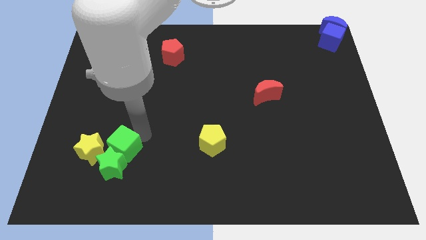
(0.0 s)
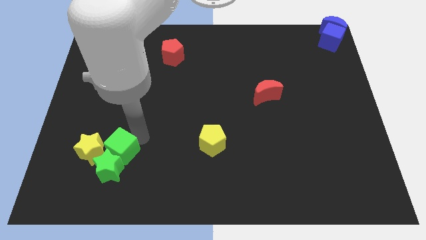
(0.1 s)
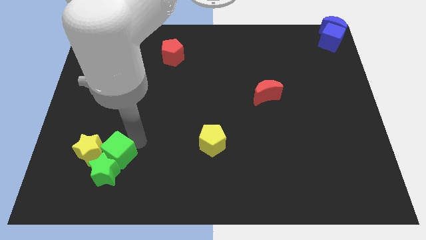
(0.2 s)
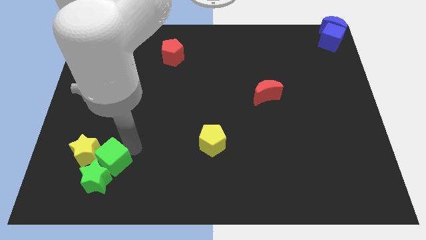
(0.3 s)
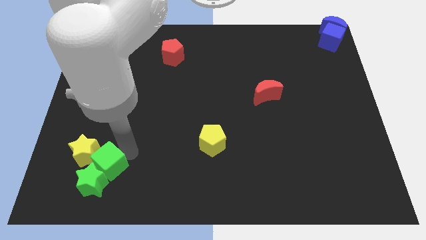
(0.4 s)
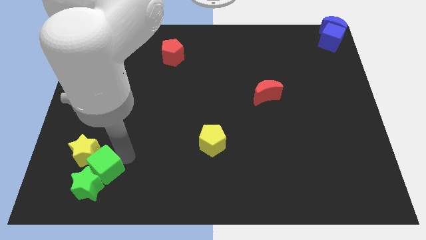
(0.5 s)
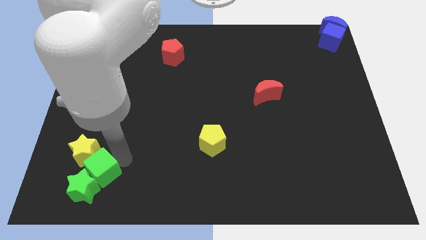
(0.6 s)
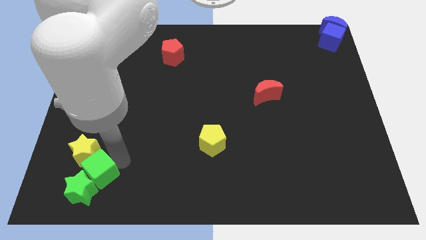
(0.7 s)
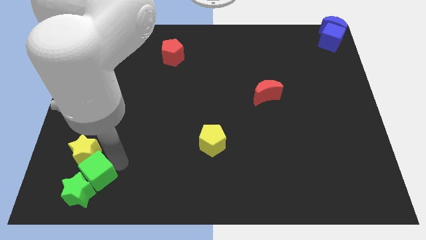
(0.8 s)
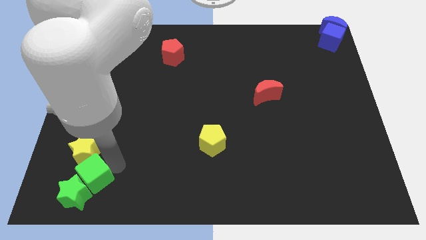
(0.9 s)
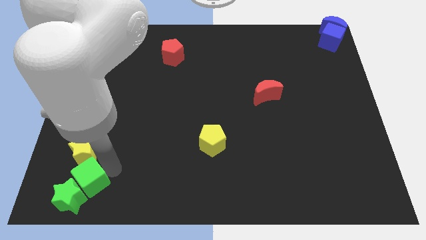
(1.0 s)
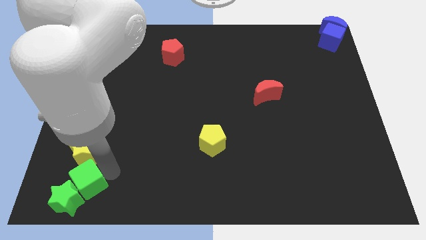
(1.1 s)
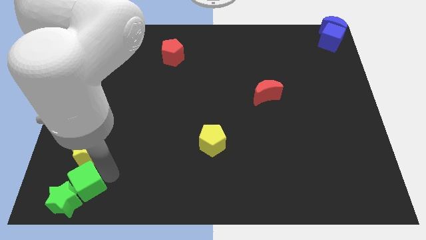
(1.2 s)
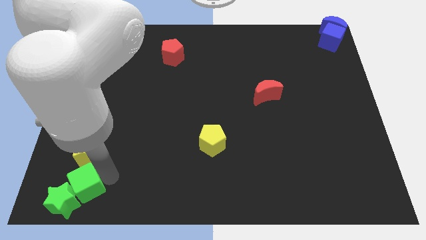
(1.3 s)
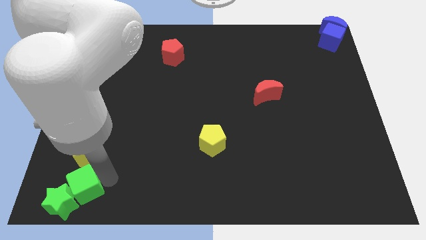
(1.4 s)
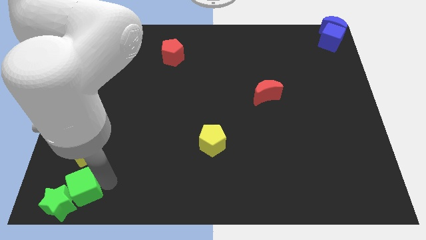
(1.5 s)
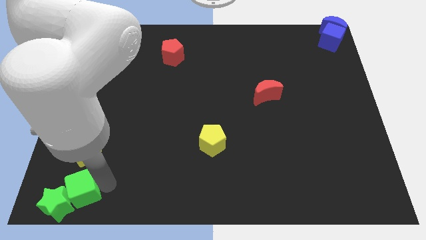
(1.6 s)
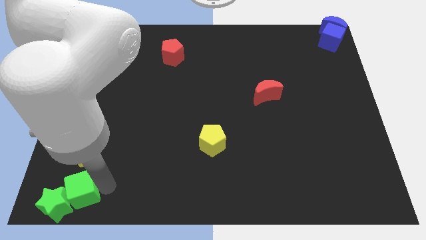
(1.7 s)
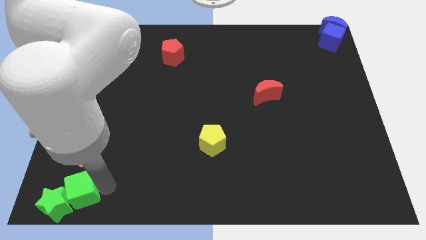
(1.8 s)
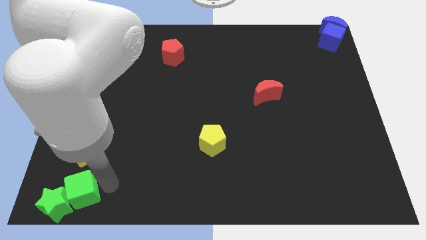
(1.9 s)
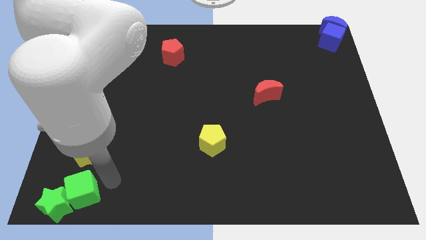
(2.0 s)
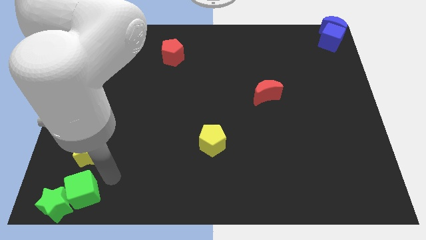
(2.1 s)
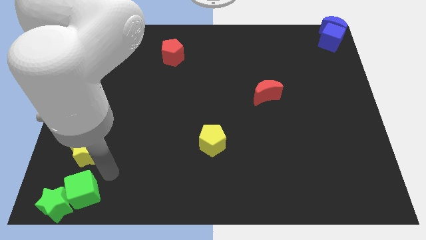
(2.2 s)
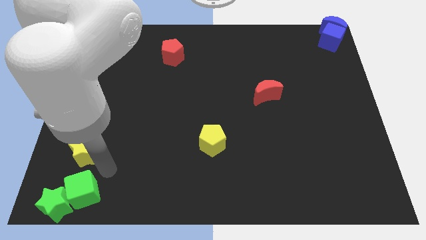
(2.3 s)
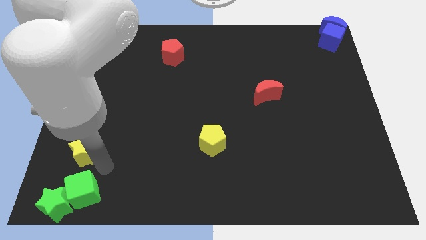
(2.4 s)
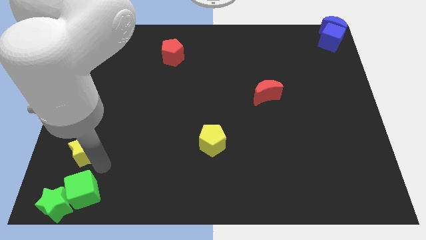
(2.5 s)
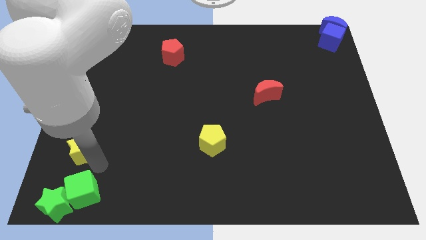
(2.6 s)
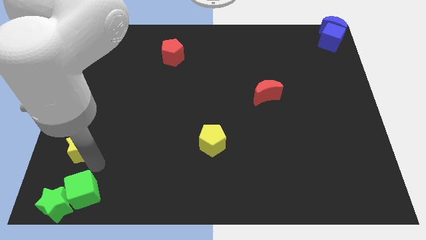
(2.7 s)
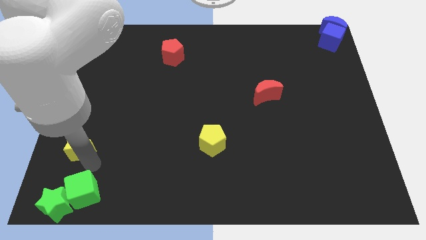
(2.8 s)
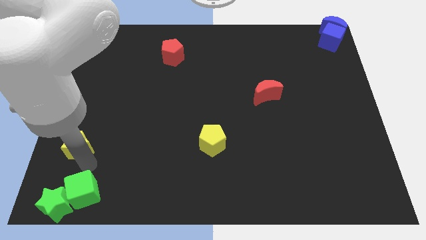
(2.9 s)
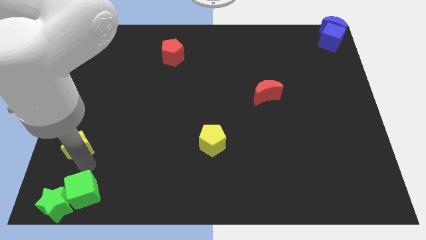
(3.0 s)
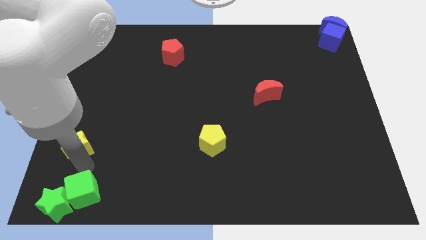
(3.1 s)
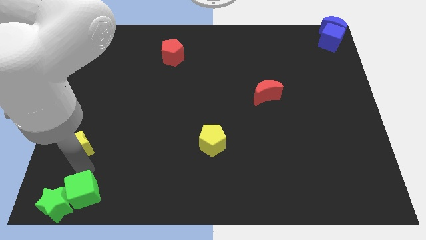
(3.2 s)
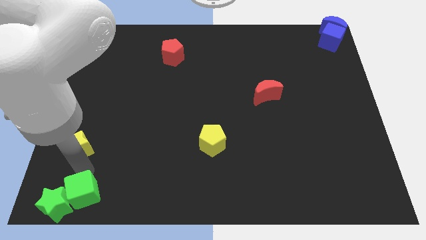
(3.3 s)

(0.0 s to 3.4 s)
move the green blocks towards the bottom left corner of the board

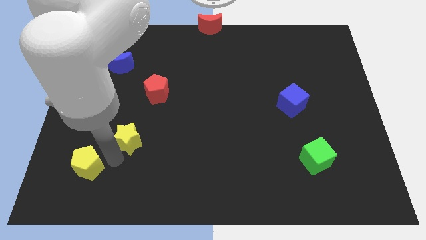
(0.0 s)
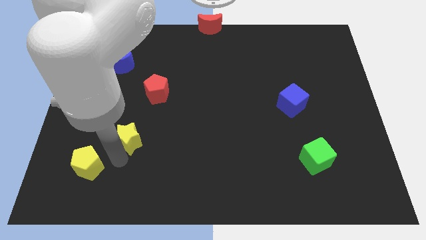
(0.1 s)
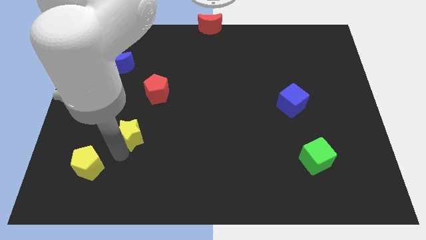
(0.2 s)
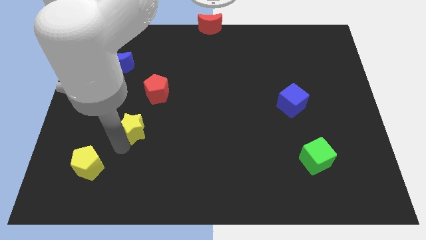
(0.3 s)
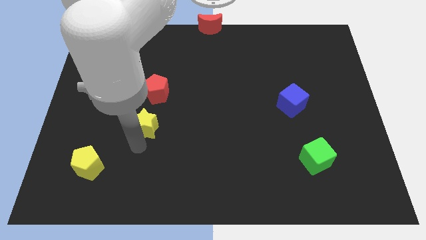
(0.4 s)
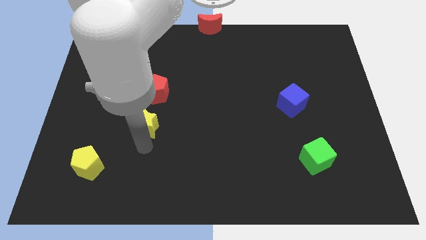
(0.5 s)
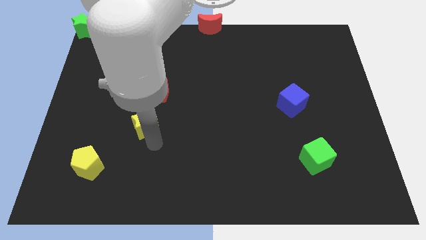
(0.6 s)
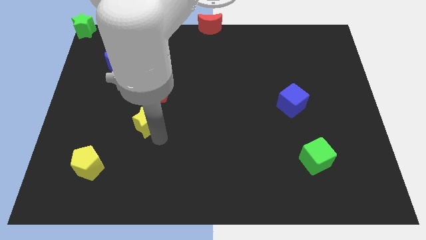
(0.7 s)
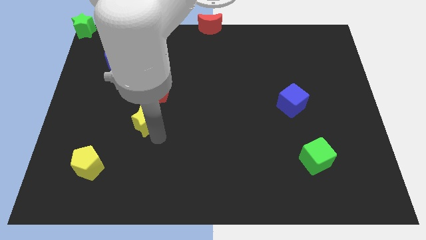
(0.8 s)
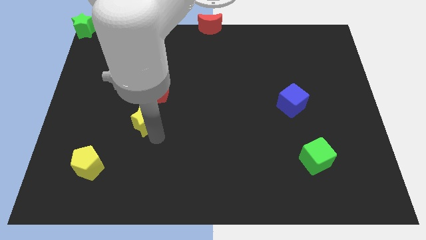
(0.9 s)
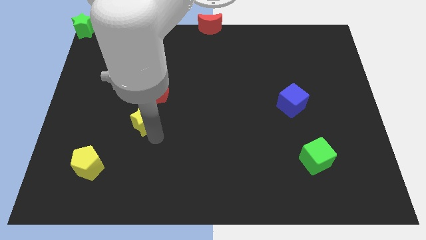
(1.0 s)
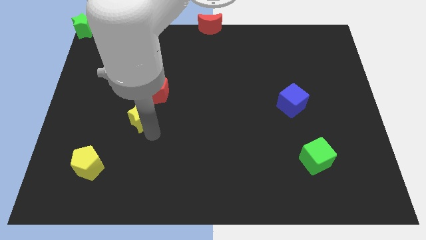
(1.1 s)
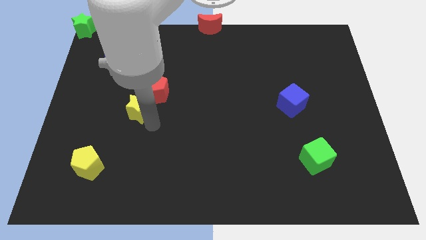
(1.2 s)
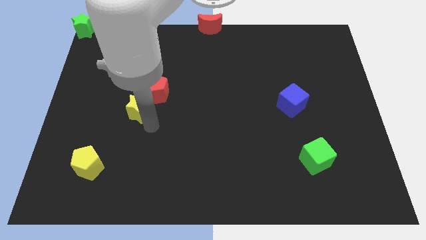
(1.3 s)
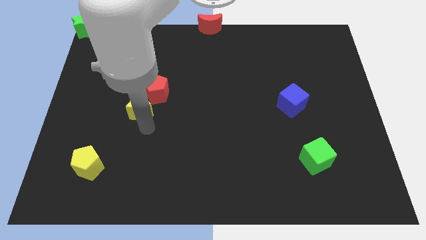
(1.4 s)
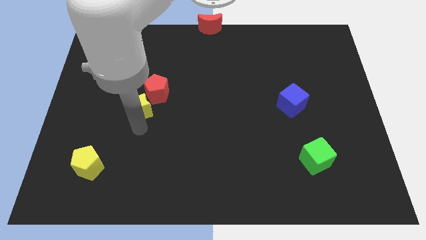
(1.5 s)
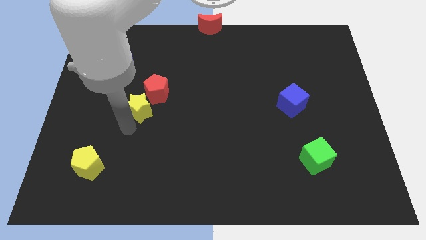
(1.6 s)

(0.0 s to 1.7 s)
place the yellow star below the red pentagon

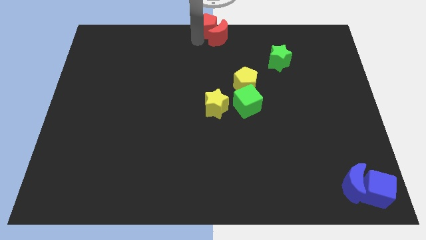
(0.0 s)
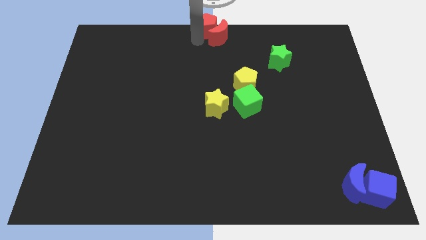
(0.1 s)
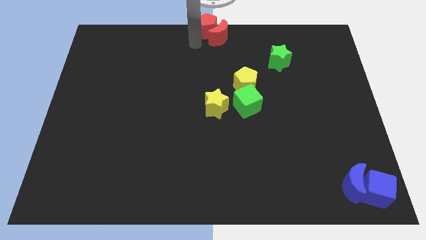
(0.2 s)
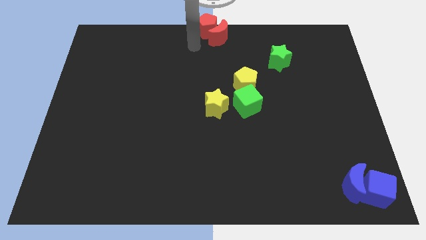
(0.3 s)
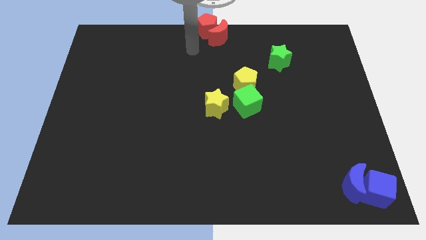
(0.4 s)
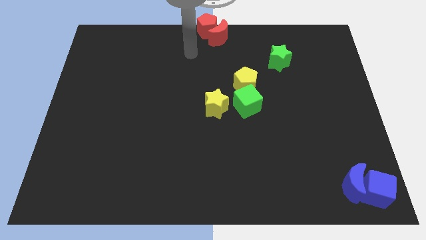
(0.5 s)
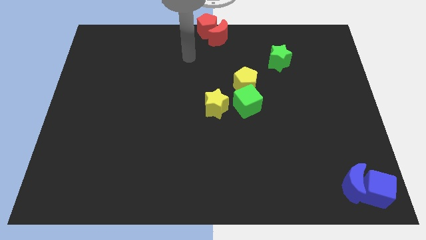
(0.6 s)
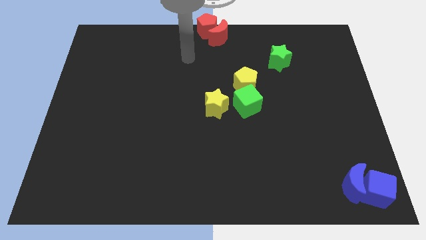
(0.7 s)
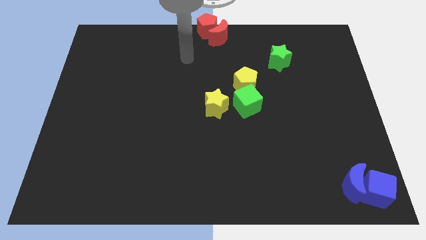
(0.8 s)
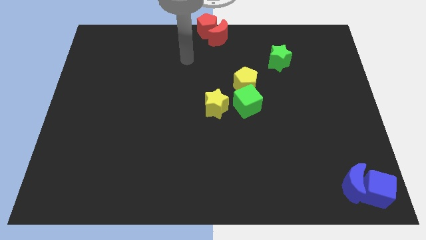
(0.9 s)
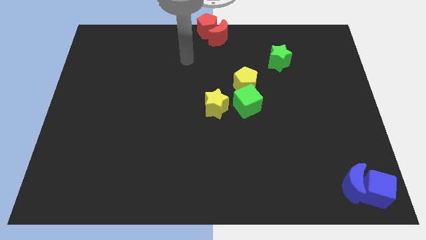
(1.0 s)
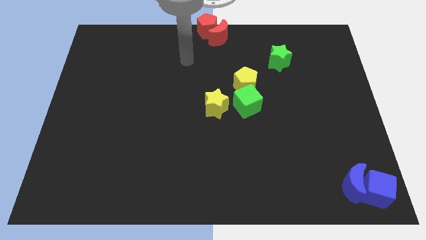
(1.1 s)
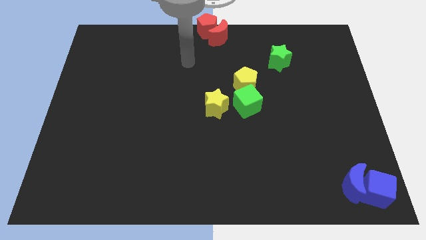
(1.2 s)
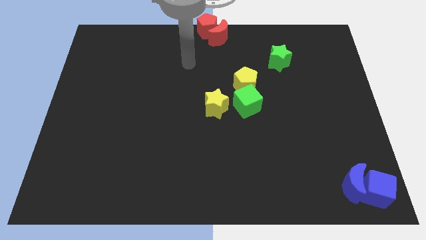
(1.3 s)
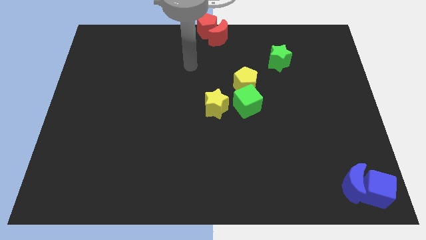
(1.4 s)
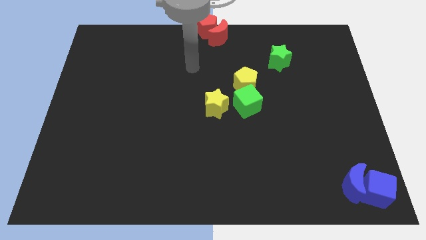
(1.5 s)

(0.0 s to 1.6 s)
move your arm away from red pentagon

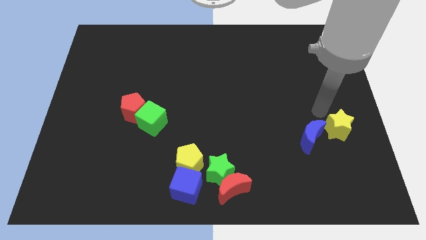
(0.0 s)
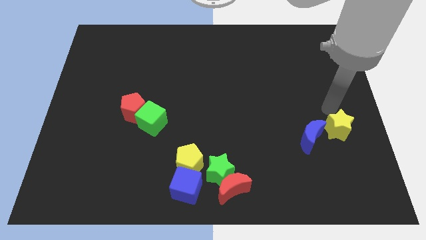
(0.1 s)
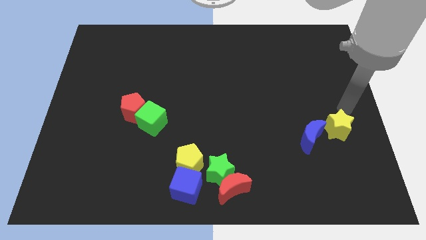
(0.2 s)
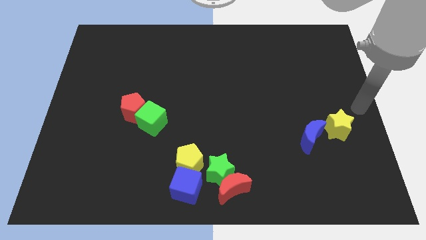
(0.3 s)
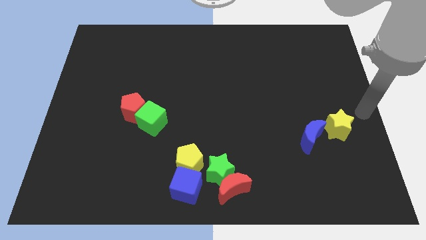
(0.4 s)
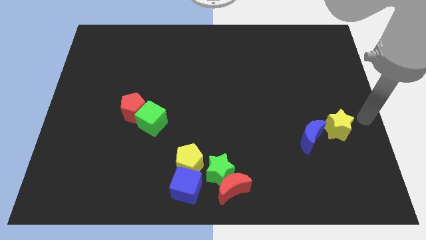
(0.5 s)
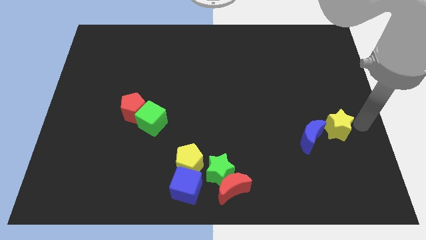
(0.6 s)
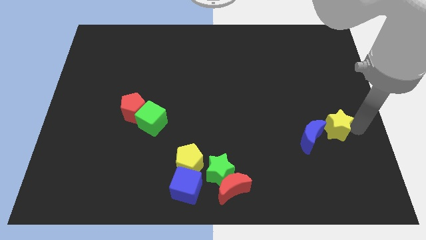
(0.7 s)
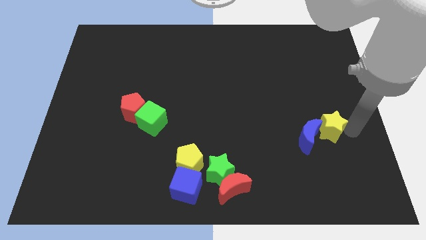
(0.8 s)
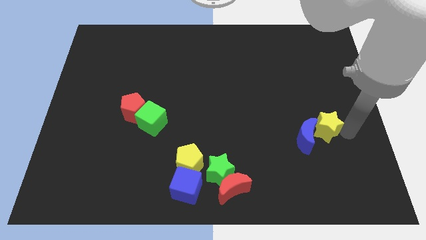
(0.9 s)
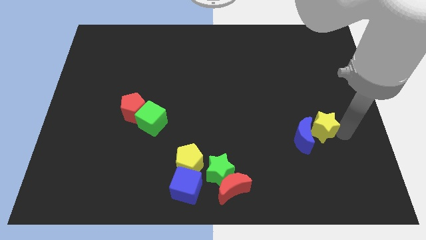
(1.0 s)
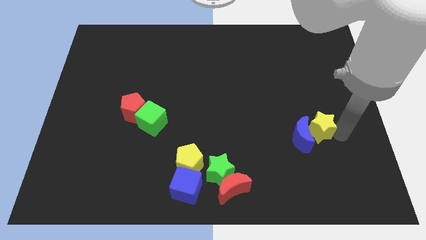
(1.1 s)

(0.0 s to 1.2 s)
push the yellow star into the blue moon

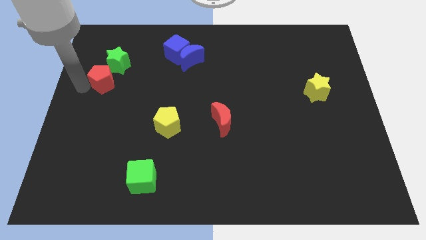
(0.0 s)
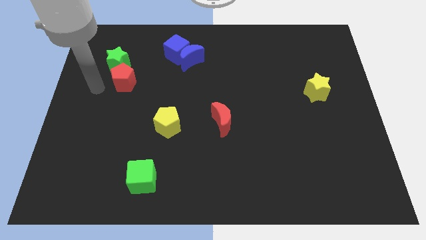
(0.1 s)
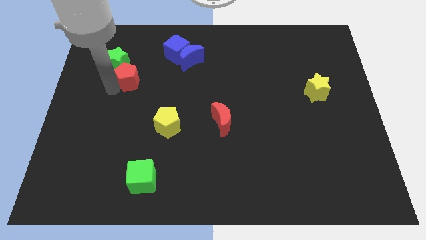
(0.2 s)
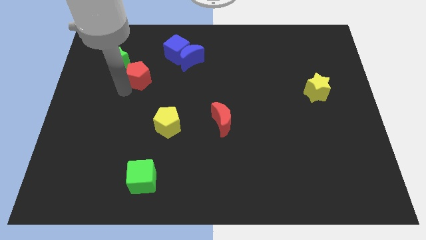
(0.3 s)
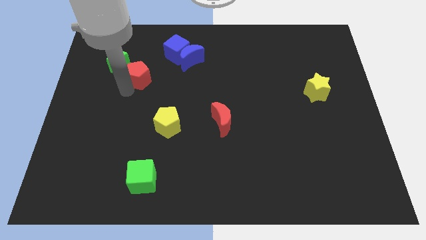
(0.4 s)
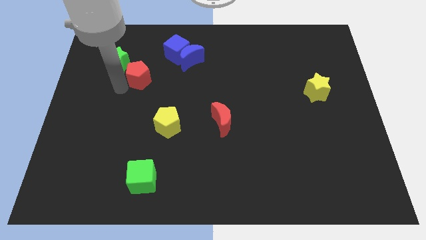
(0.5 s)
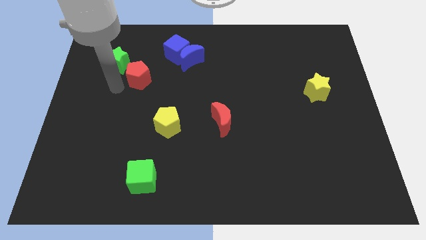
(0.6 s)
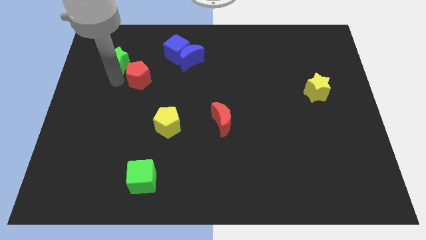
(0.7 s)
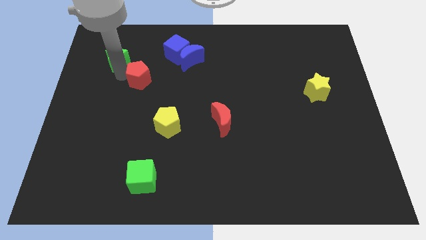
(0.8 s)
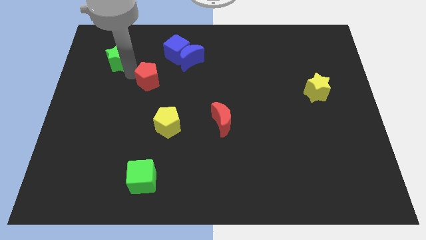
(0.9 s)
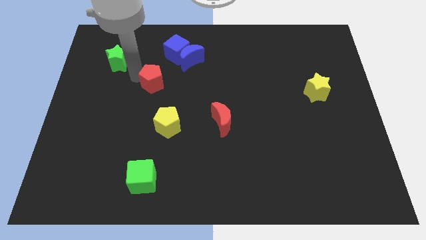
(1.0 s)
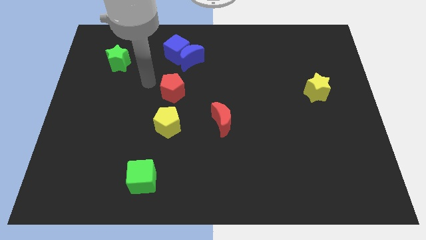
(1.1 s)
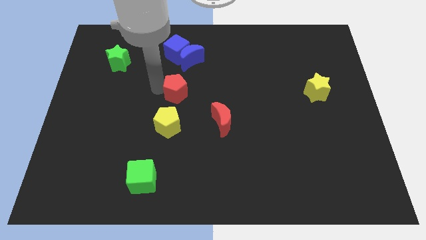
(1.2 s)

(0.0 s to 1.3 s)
place the red pentagon vertically above the yellow pentagon
